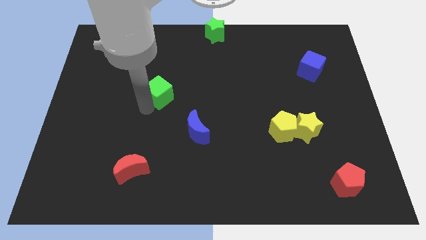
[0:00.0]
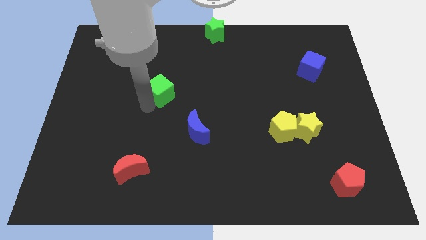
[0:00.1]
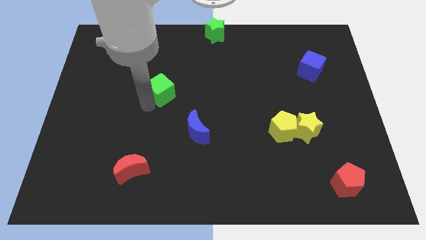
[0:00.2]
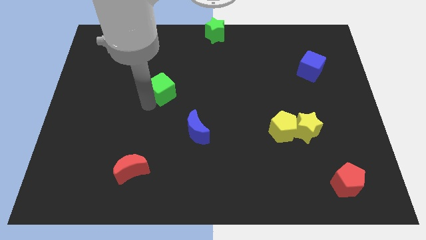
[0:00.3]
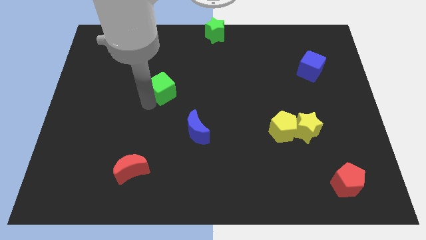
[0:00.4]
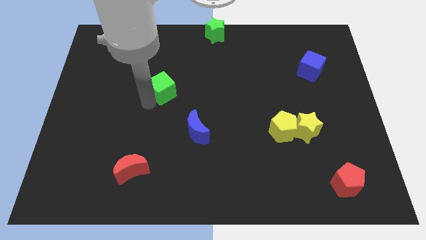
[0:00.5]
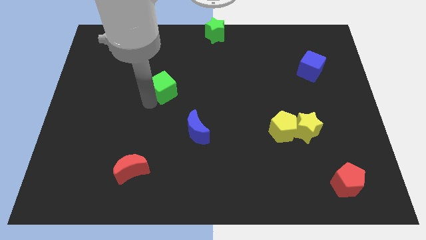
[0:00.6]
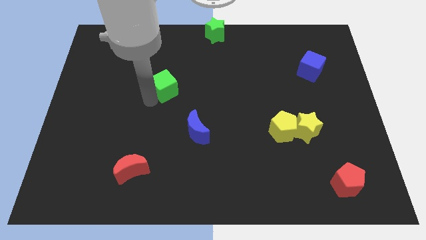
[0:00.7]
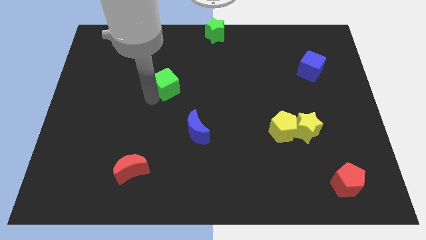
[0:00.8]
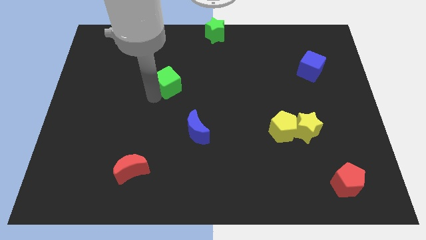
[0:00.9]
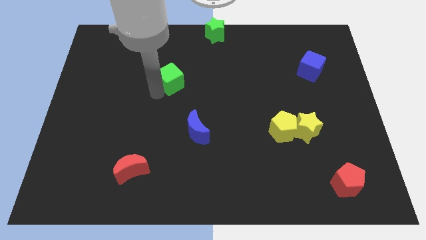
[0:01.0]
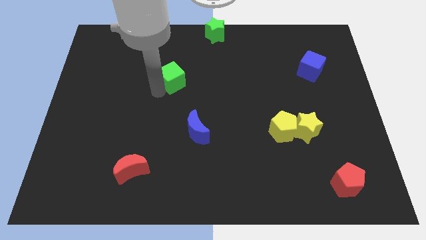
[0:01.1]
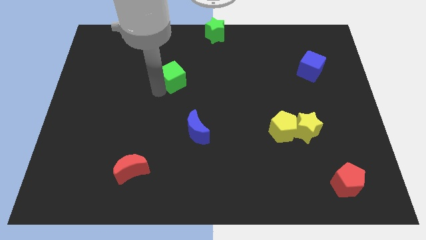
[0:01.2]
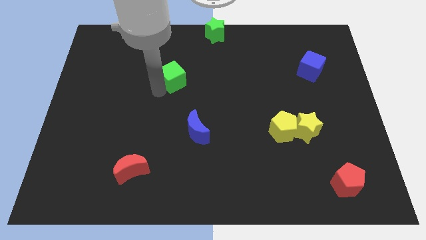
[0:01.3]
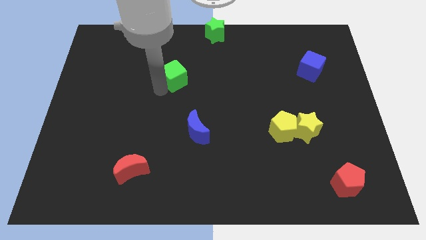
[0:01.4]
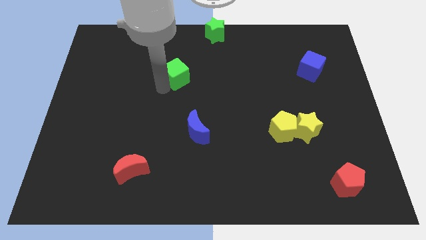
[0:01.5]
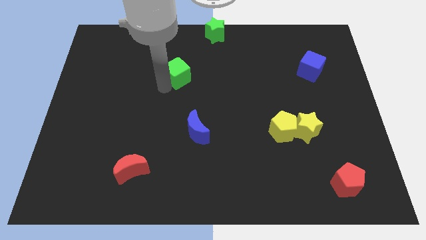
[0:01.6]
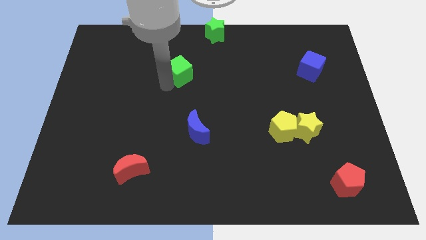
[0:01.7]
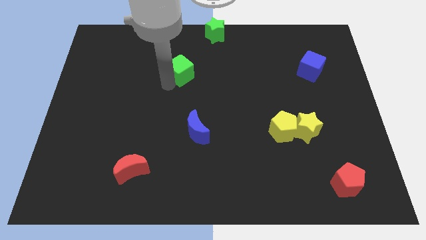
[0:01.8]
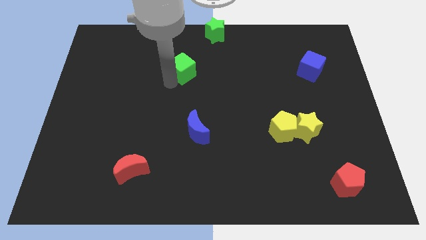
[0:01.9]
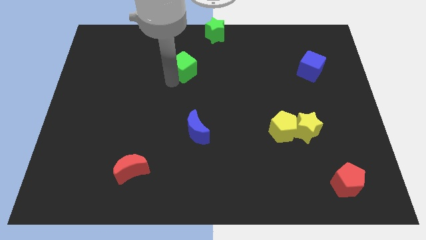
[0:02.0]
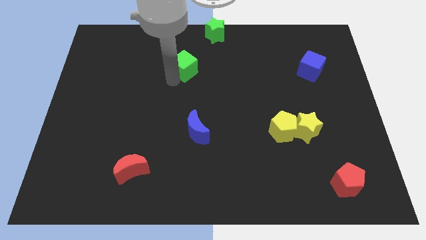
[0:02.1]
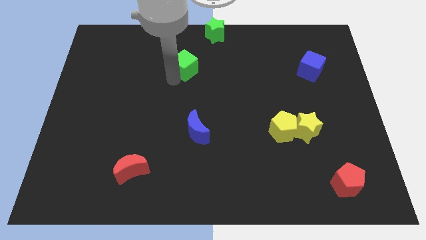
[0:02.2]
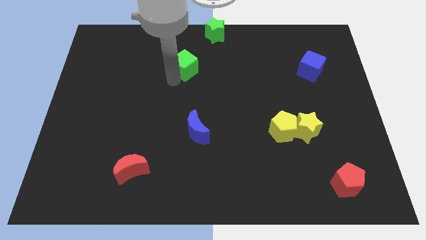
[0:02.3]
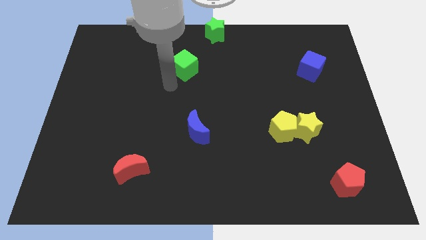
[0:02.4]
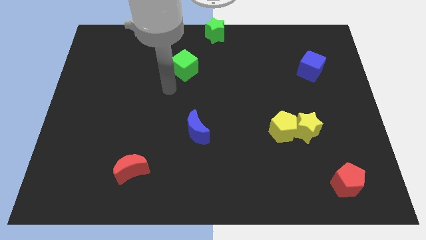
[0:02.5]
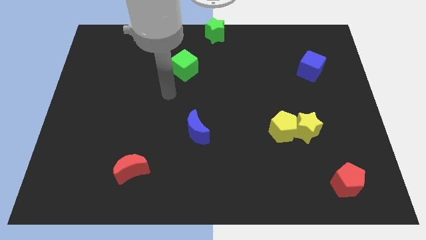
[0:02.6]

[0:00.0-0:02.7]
place green cube to the top of blue moon

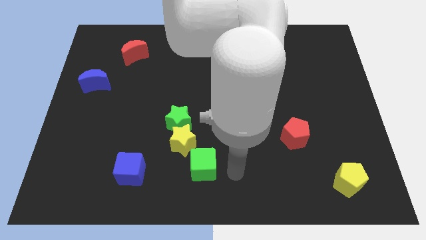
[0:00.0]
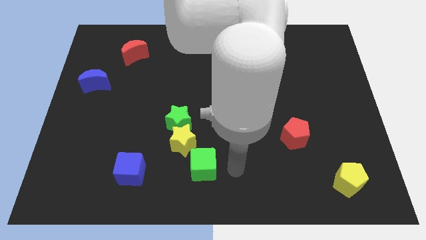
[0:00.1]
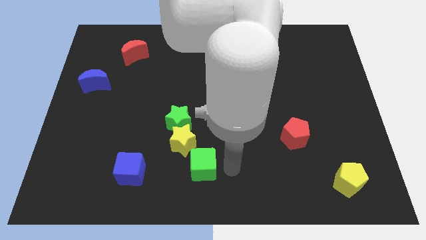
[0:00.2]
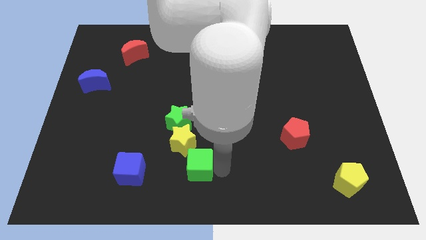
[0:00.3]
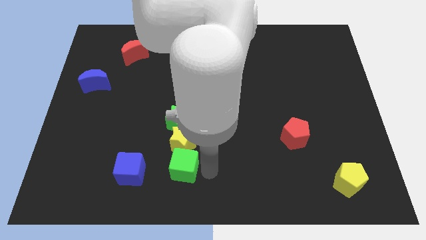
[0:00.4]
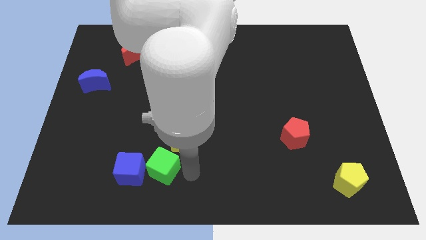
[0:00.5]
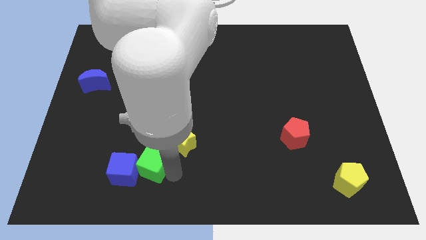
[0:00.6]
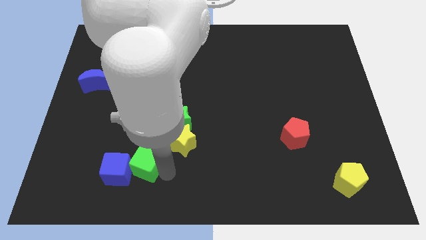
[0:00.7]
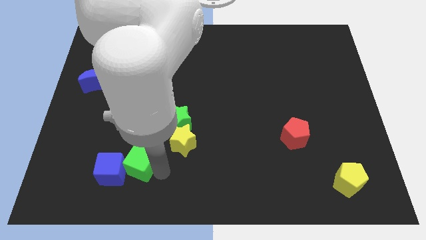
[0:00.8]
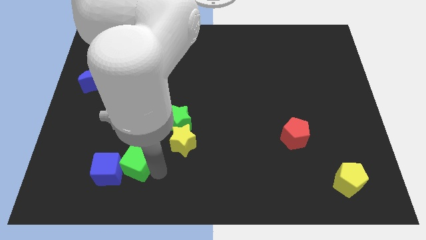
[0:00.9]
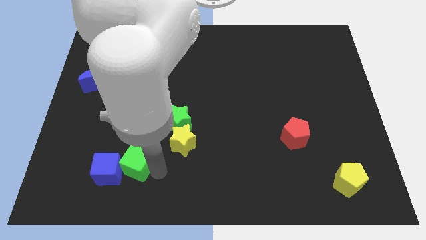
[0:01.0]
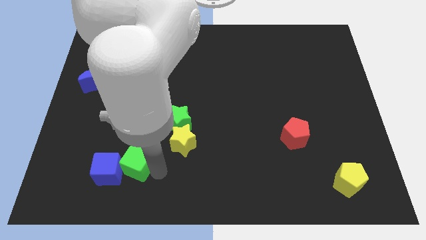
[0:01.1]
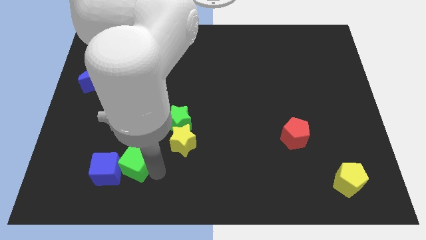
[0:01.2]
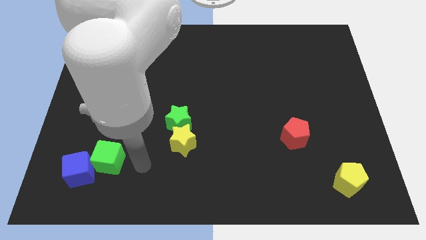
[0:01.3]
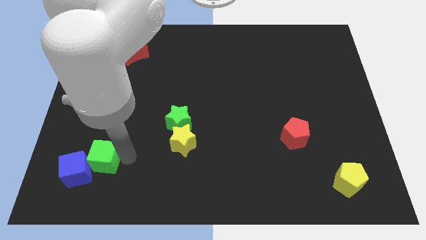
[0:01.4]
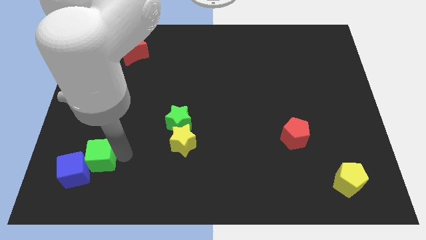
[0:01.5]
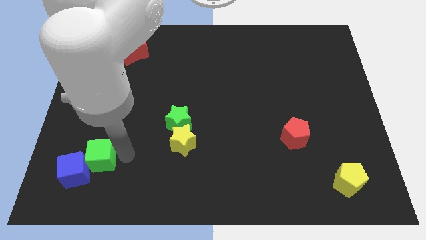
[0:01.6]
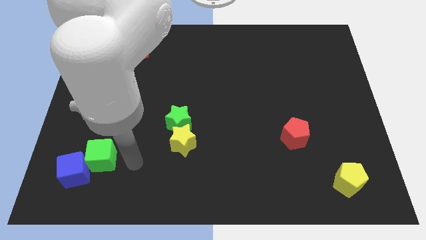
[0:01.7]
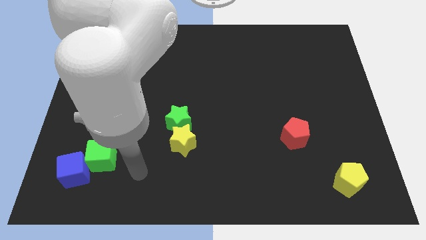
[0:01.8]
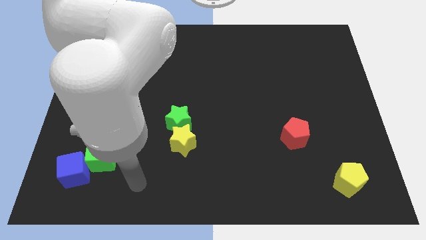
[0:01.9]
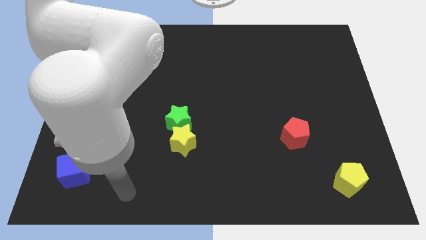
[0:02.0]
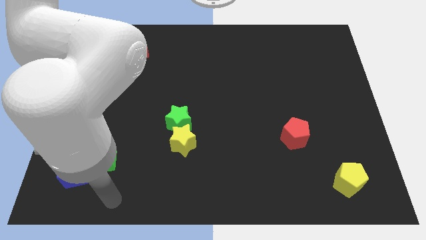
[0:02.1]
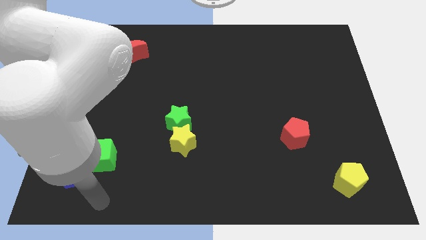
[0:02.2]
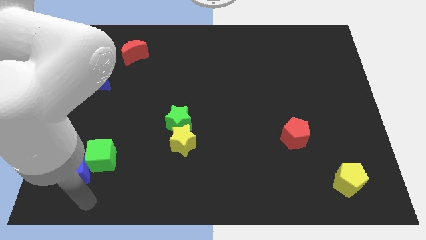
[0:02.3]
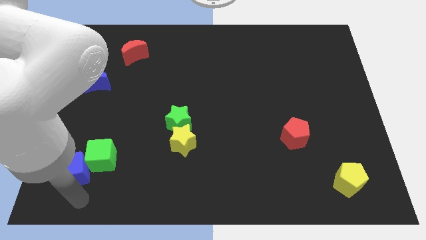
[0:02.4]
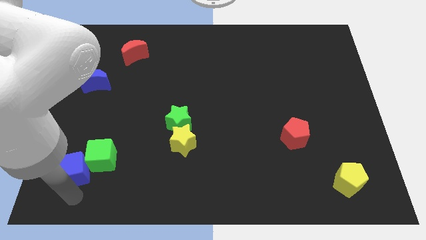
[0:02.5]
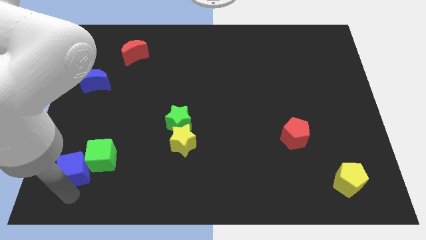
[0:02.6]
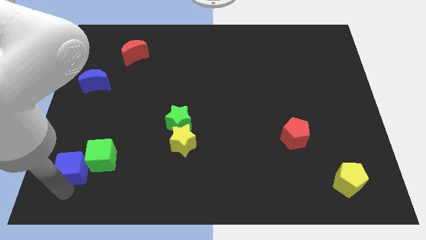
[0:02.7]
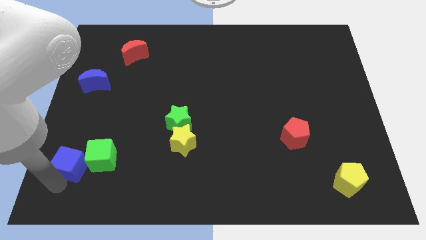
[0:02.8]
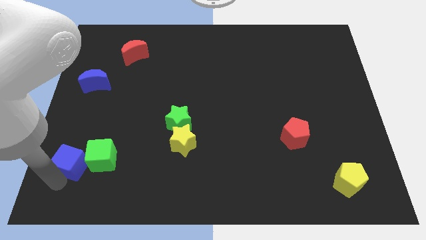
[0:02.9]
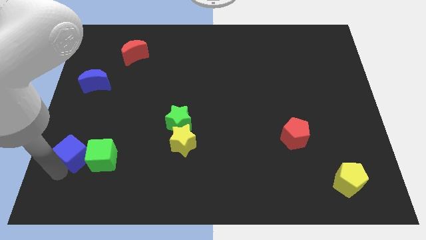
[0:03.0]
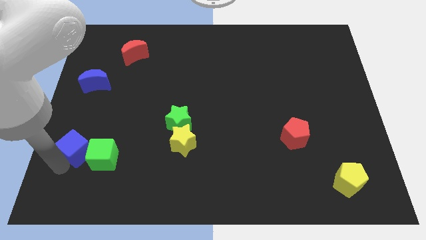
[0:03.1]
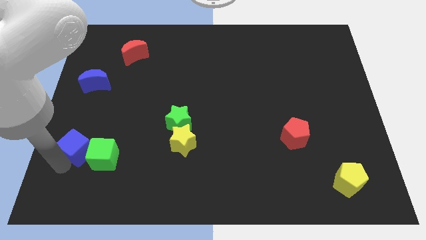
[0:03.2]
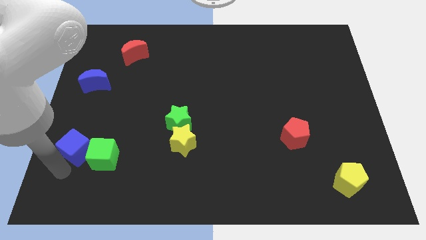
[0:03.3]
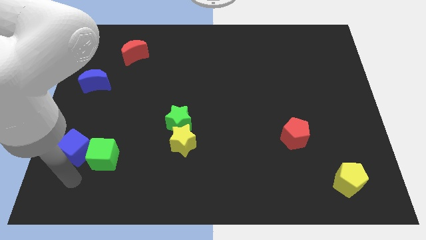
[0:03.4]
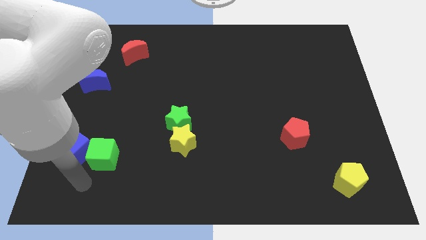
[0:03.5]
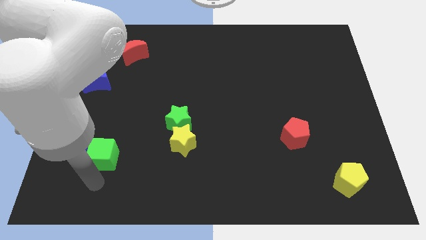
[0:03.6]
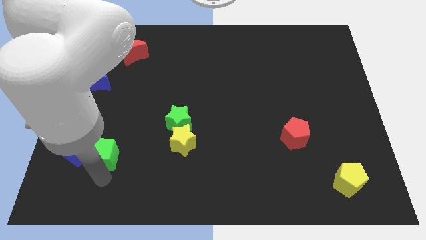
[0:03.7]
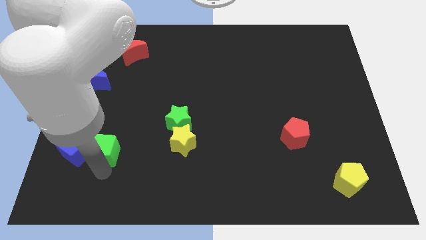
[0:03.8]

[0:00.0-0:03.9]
move the blue cube above to the green cube

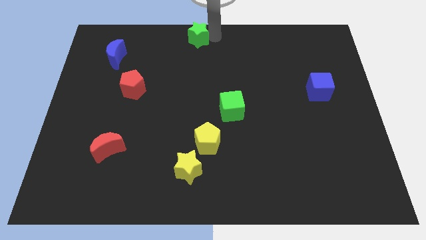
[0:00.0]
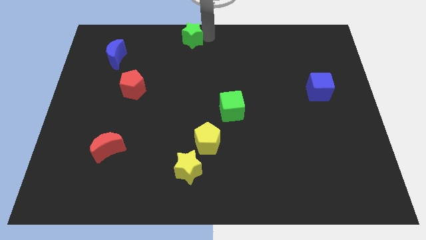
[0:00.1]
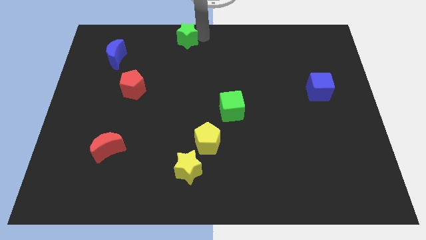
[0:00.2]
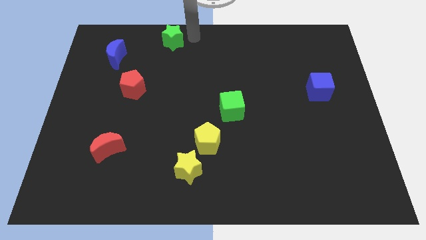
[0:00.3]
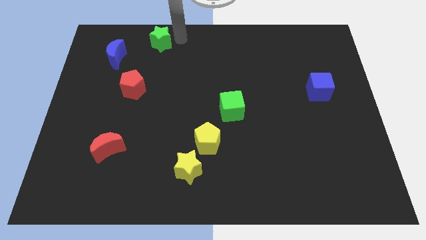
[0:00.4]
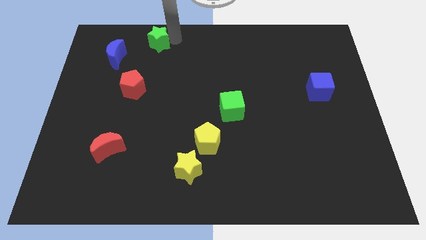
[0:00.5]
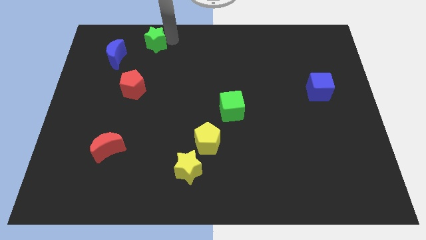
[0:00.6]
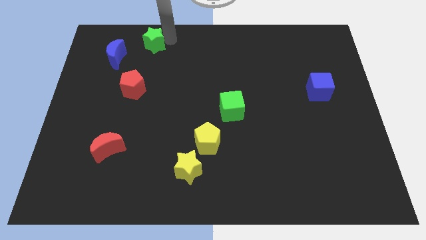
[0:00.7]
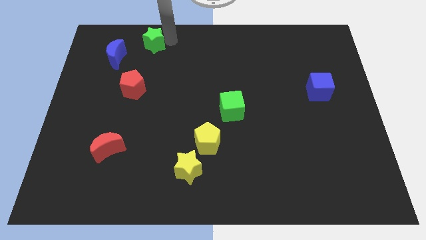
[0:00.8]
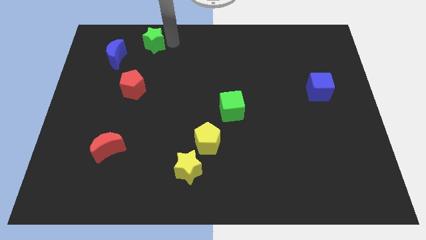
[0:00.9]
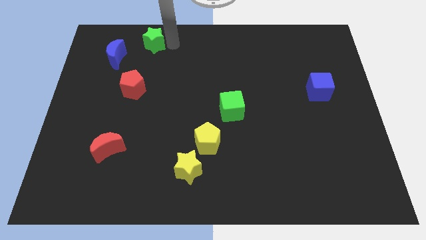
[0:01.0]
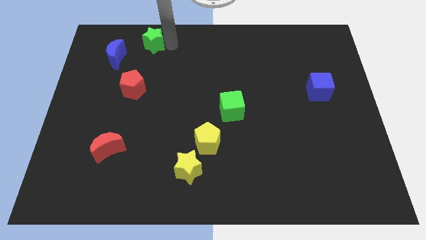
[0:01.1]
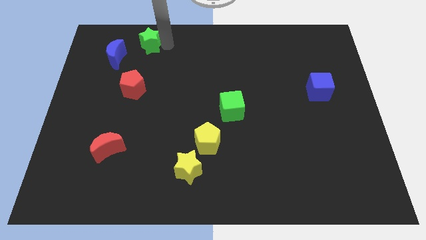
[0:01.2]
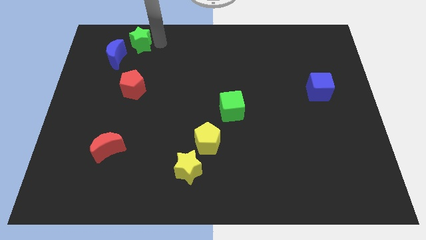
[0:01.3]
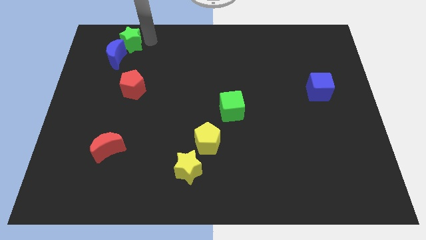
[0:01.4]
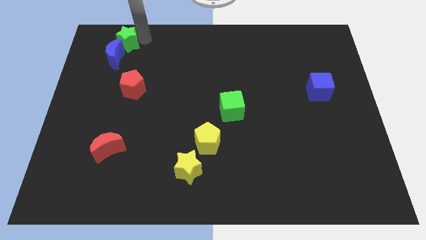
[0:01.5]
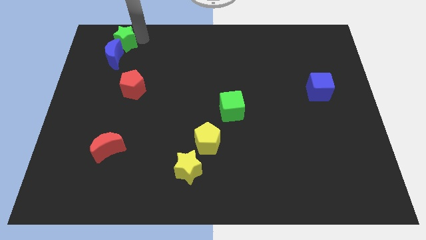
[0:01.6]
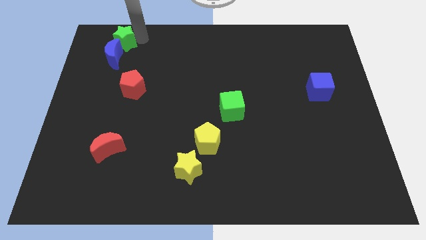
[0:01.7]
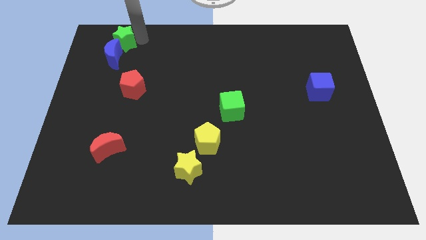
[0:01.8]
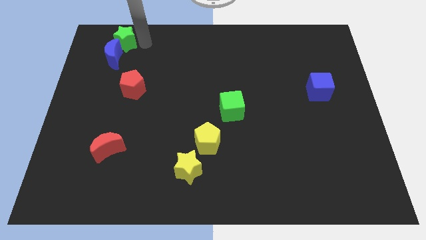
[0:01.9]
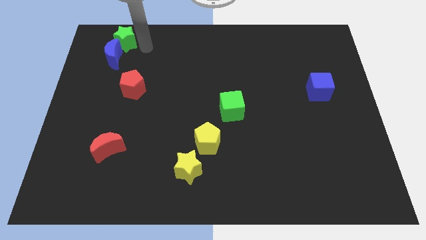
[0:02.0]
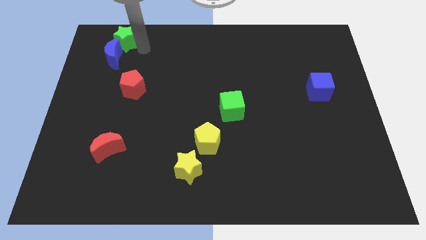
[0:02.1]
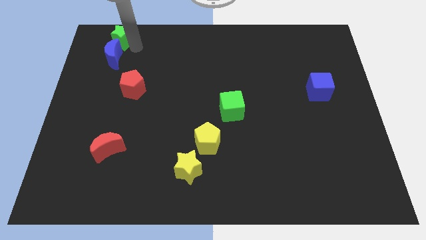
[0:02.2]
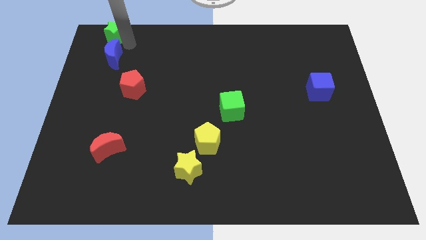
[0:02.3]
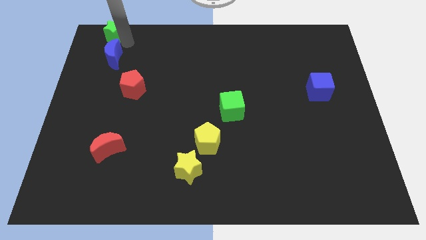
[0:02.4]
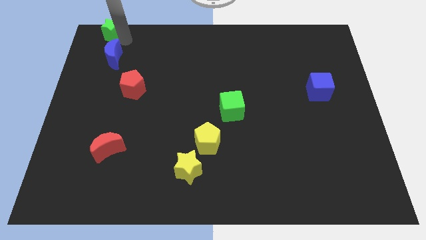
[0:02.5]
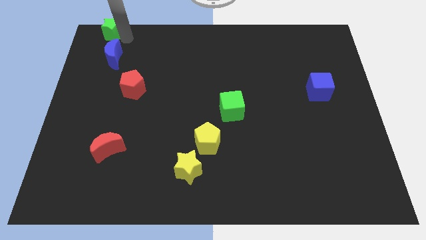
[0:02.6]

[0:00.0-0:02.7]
push the green star above the blue moon
